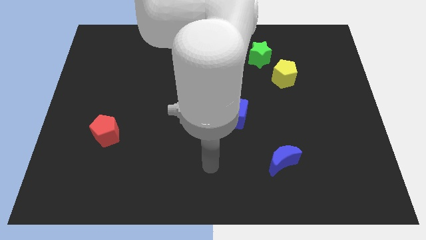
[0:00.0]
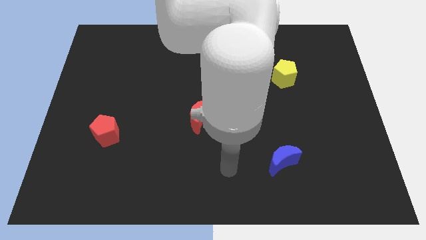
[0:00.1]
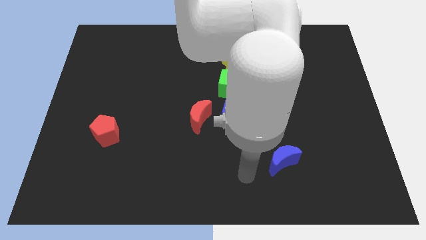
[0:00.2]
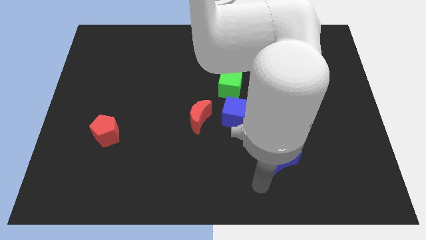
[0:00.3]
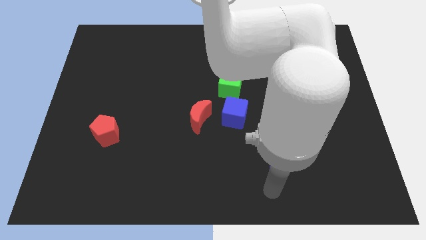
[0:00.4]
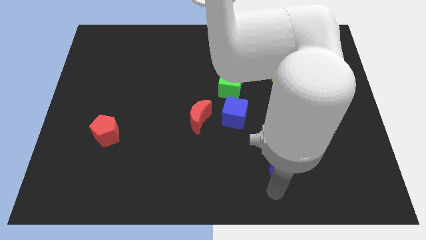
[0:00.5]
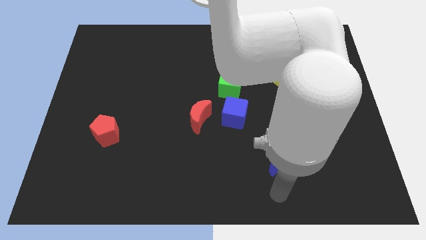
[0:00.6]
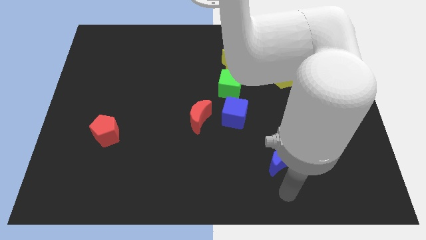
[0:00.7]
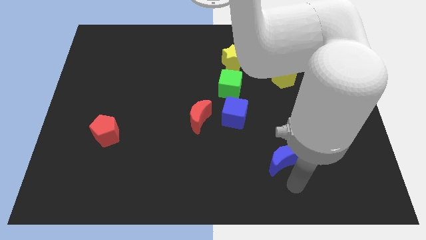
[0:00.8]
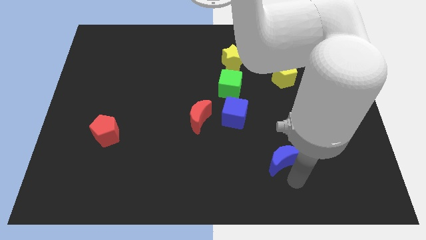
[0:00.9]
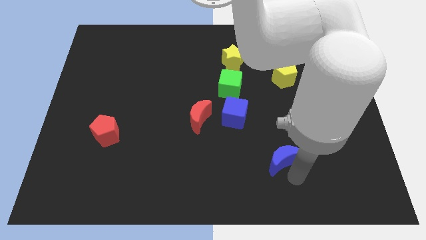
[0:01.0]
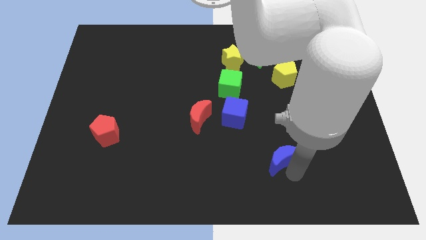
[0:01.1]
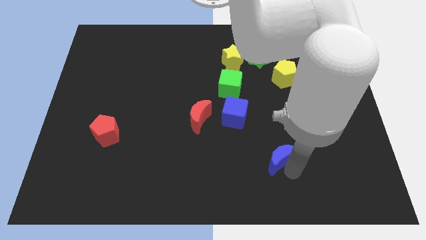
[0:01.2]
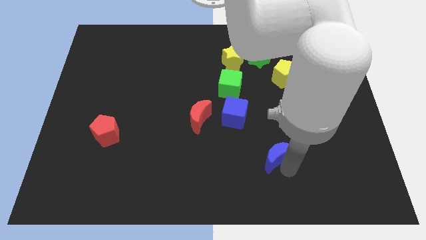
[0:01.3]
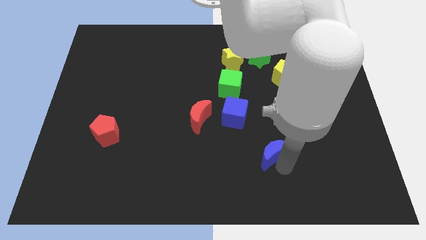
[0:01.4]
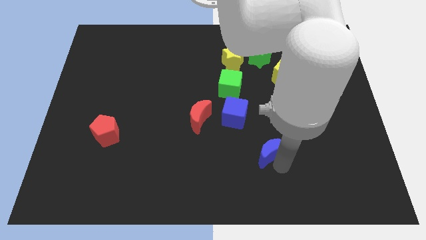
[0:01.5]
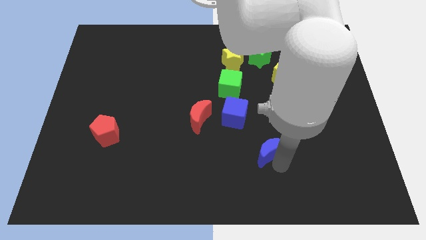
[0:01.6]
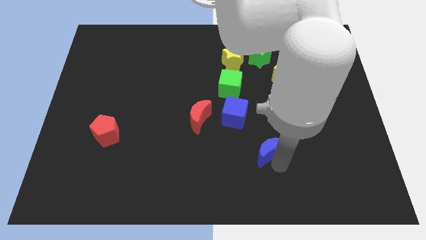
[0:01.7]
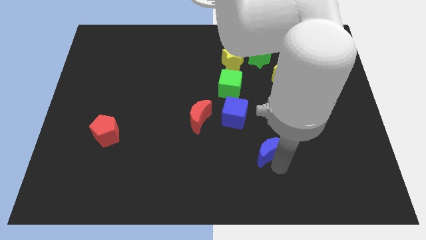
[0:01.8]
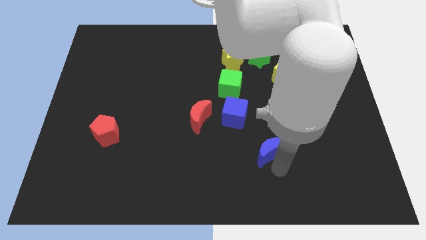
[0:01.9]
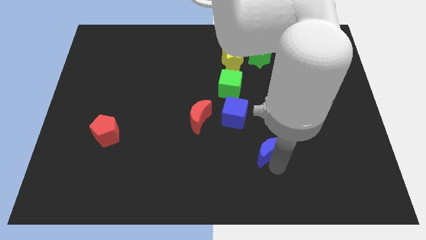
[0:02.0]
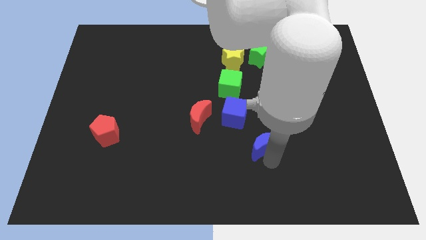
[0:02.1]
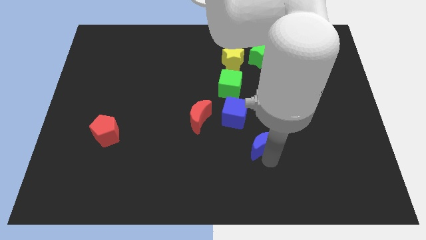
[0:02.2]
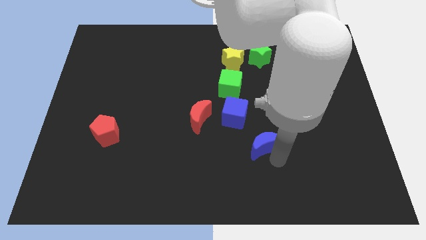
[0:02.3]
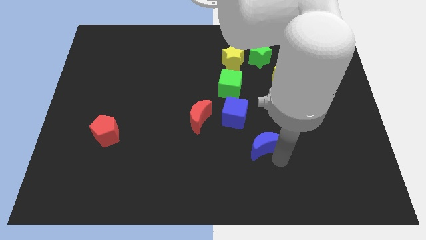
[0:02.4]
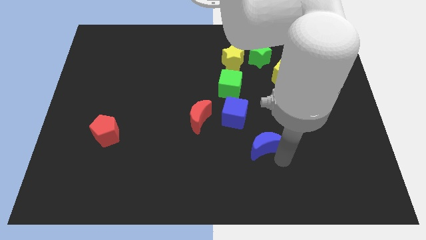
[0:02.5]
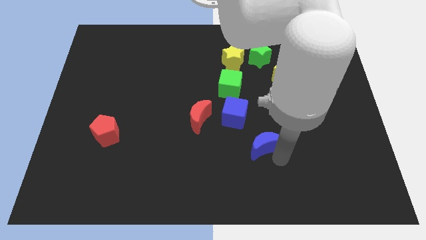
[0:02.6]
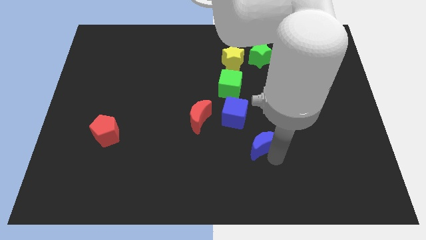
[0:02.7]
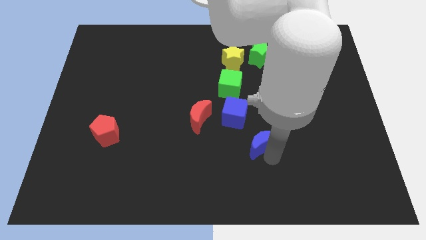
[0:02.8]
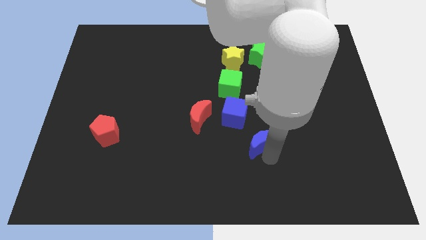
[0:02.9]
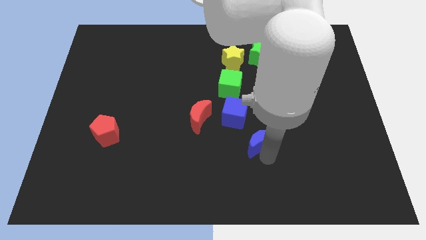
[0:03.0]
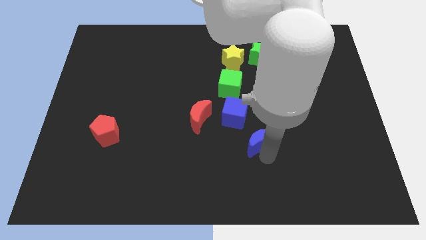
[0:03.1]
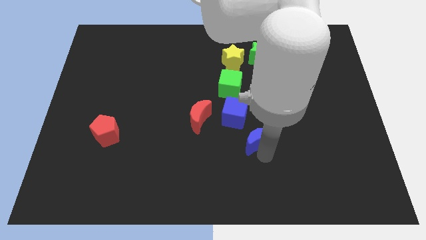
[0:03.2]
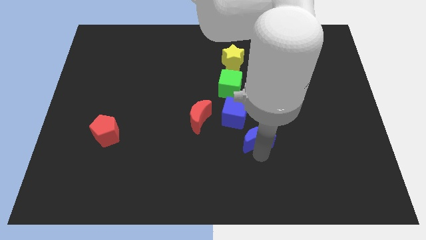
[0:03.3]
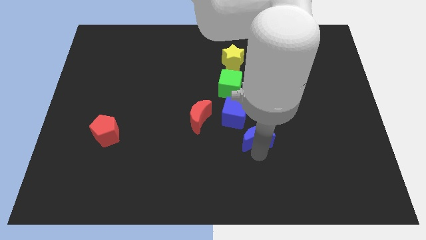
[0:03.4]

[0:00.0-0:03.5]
push the blue crescent to the bottom right of the blue cube

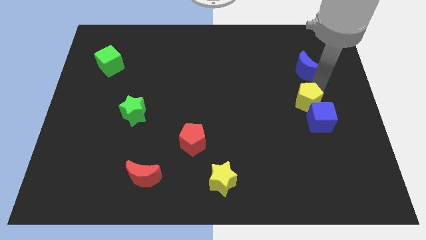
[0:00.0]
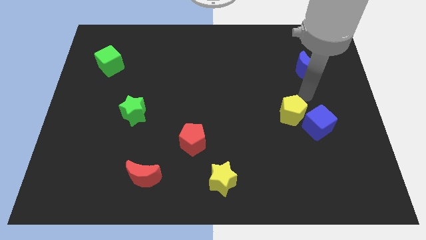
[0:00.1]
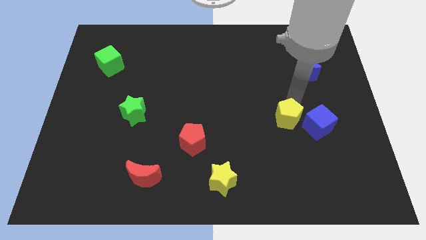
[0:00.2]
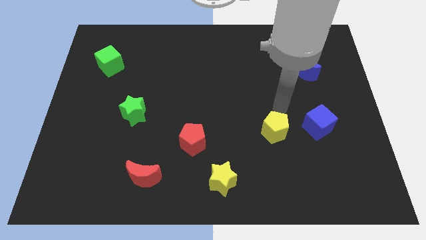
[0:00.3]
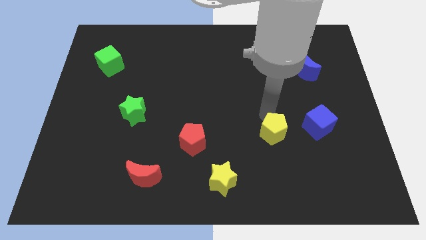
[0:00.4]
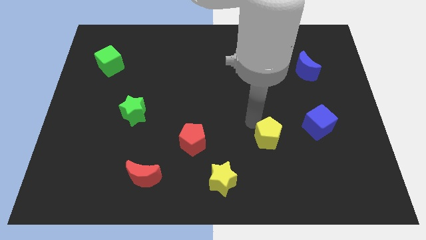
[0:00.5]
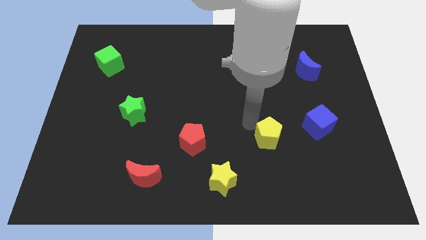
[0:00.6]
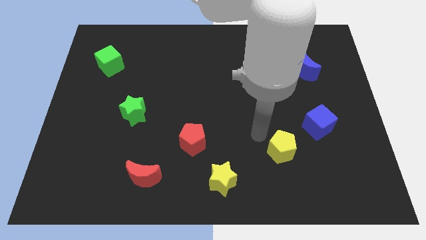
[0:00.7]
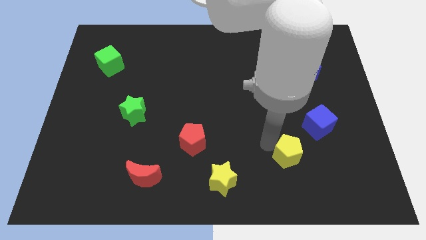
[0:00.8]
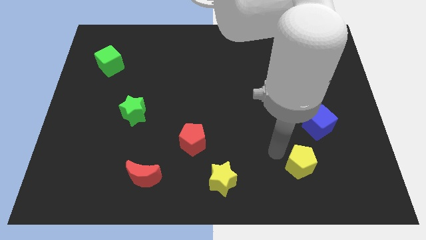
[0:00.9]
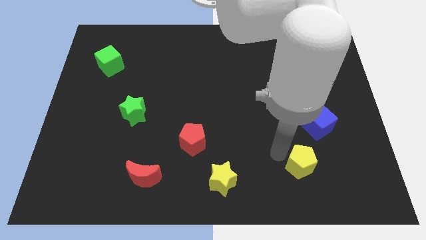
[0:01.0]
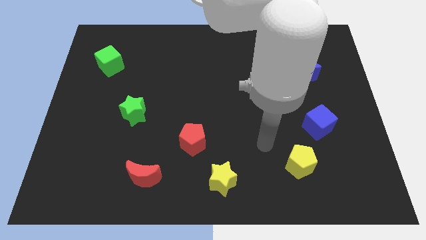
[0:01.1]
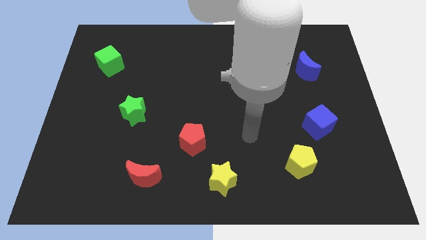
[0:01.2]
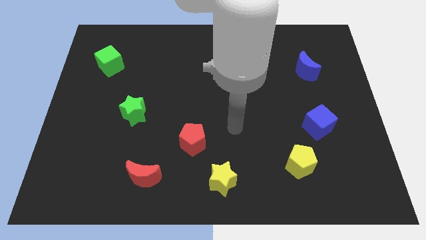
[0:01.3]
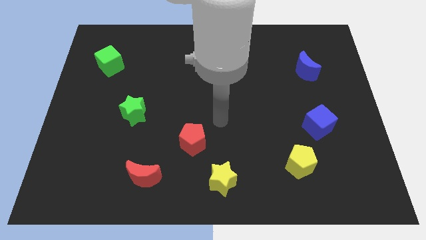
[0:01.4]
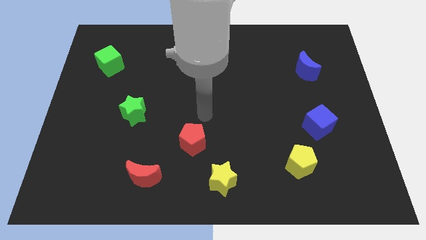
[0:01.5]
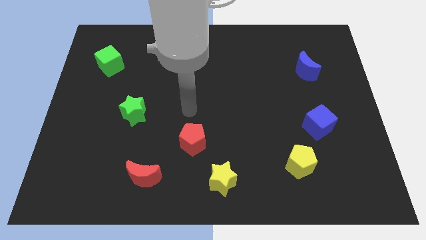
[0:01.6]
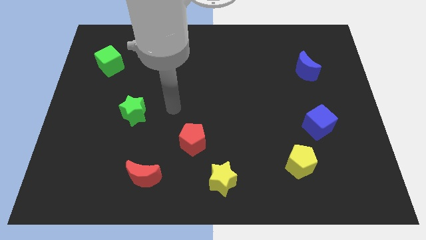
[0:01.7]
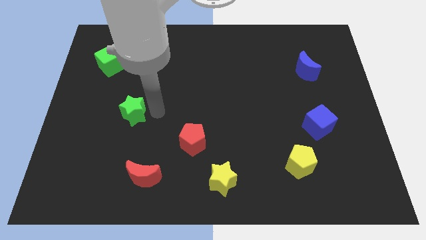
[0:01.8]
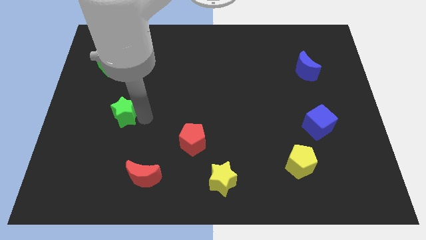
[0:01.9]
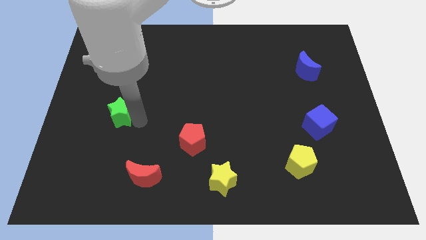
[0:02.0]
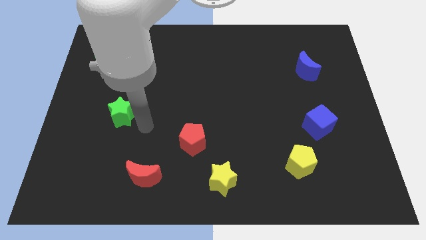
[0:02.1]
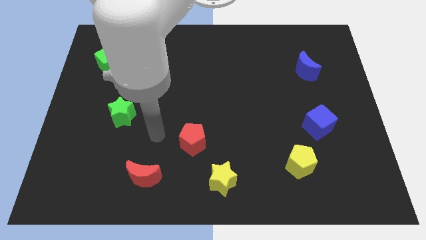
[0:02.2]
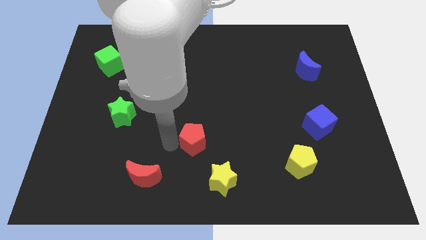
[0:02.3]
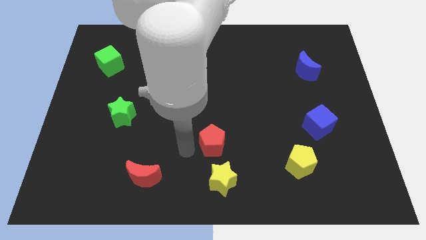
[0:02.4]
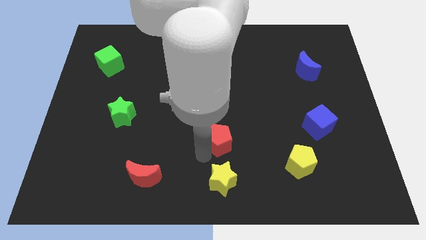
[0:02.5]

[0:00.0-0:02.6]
place the red pentagon to the top the yellow star

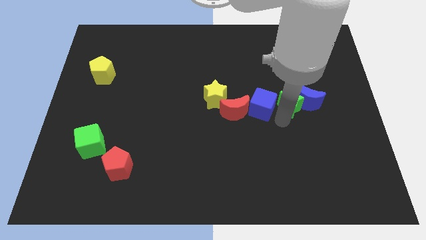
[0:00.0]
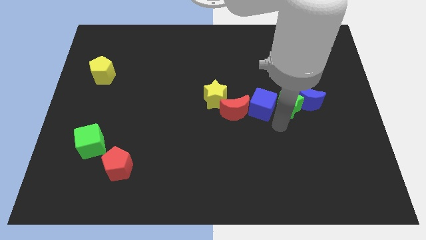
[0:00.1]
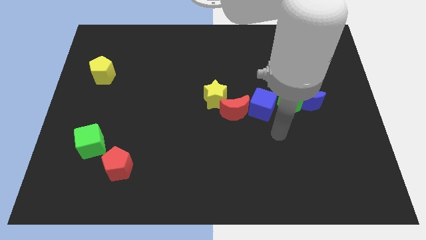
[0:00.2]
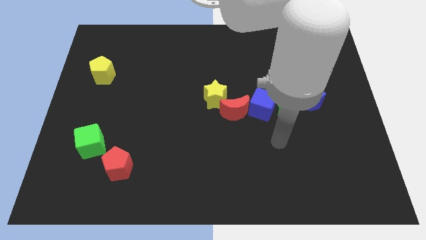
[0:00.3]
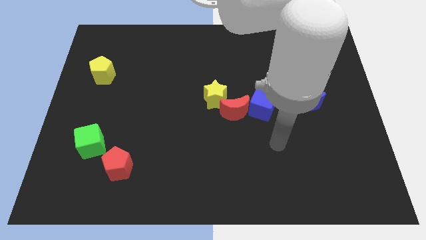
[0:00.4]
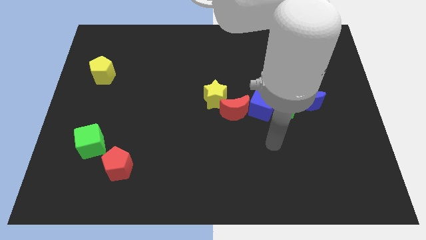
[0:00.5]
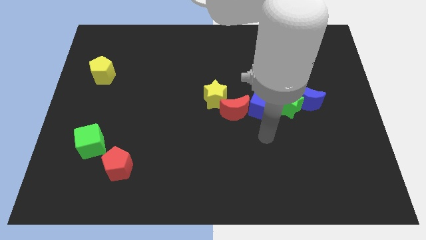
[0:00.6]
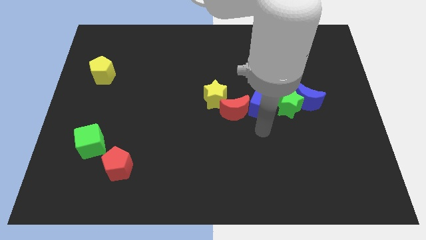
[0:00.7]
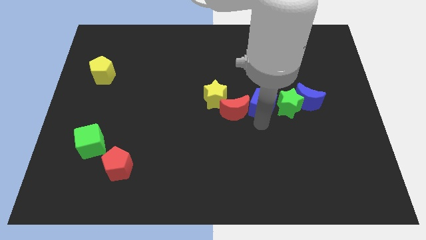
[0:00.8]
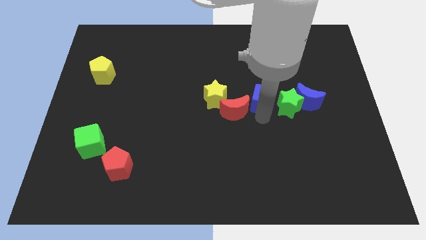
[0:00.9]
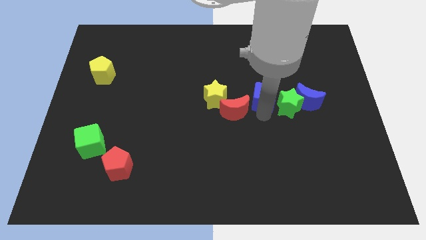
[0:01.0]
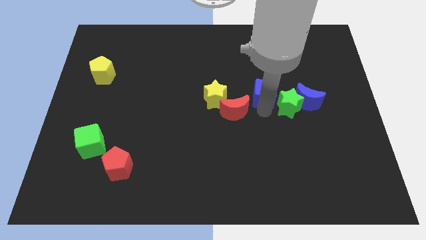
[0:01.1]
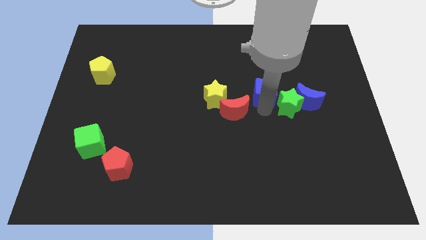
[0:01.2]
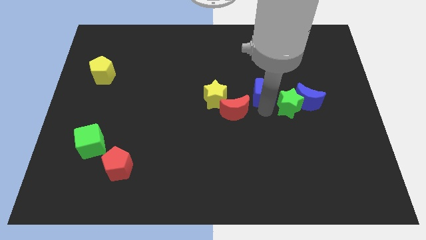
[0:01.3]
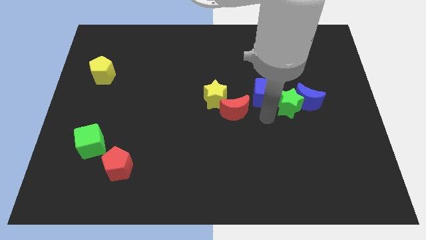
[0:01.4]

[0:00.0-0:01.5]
slightly push the blue cube towards the top side of the board

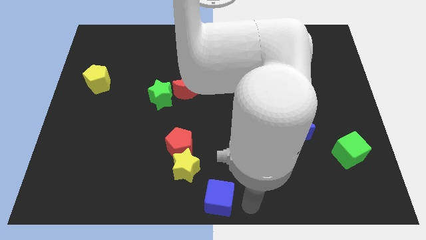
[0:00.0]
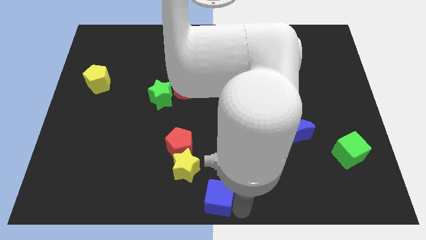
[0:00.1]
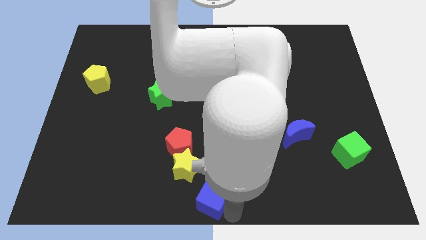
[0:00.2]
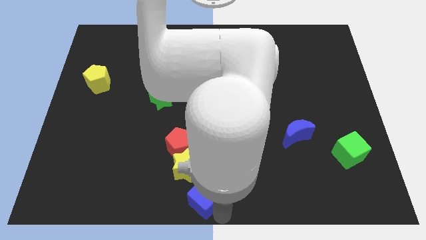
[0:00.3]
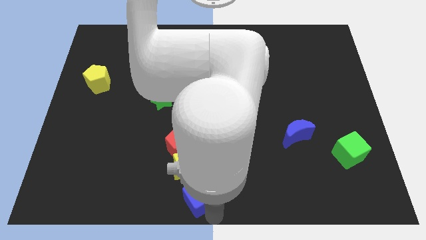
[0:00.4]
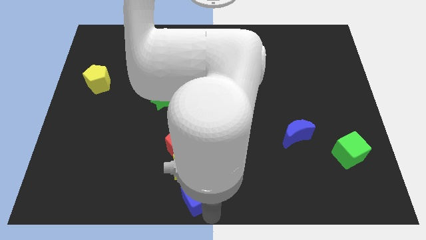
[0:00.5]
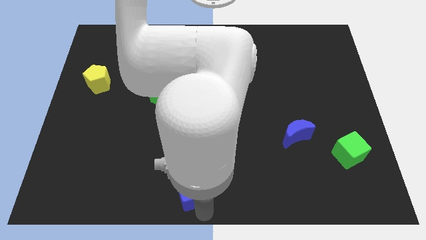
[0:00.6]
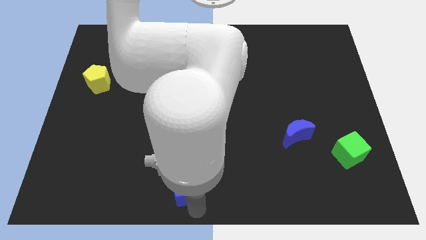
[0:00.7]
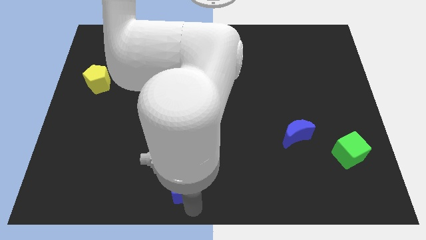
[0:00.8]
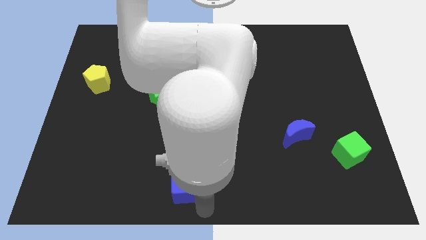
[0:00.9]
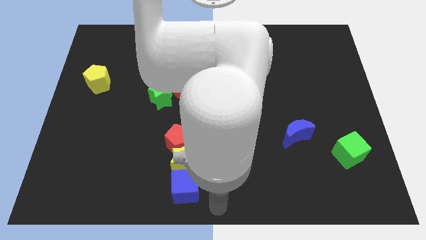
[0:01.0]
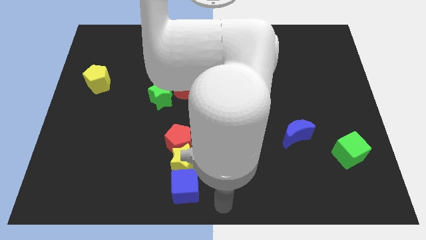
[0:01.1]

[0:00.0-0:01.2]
place the blue cube below the yellow star to form a vertical line

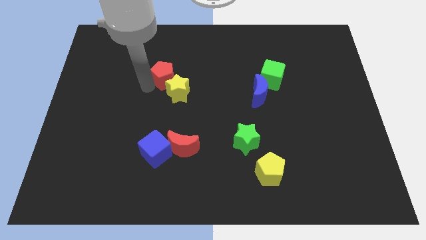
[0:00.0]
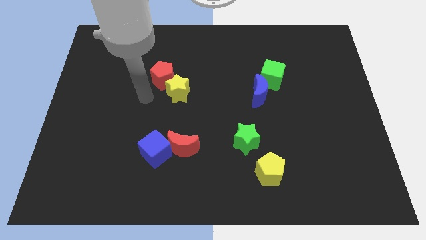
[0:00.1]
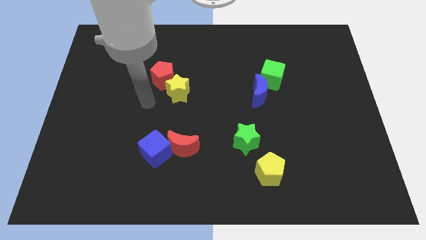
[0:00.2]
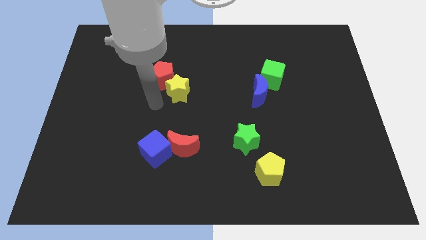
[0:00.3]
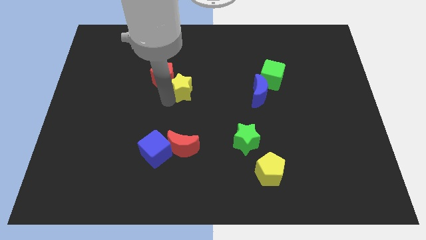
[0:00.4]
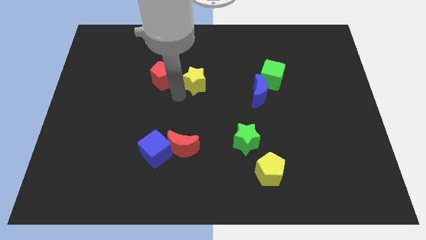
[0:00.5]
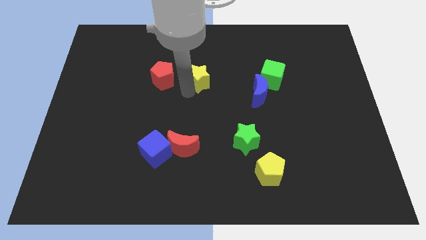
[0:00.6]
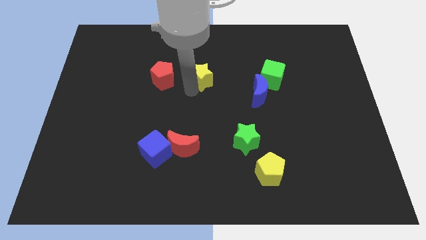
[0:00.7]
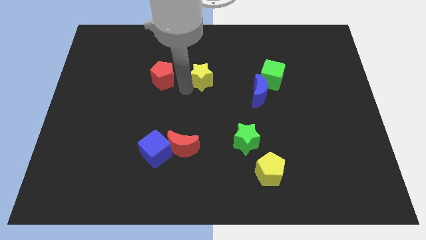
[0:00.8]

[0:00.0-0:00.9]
place the yellow star to the right side of red pentagon
